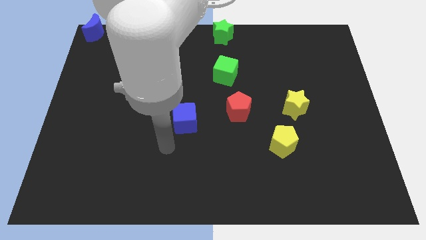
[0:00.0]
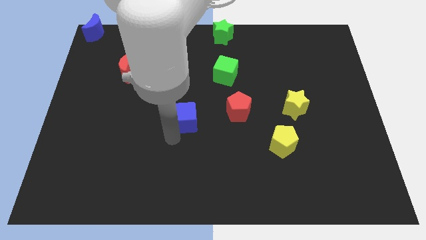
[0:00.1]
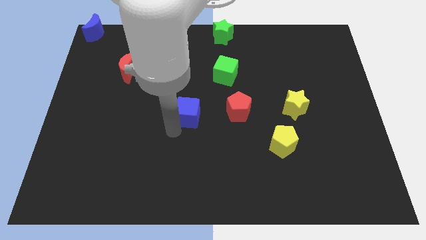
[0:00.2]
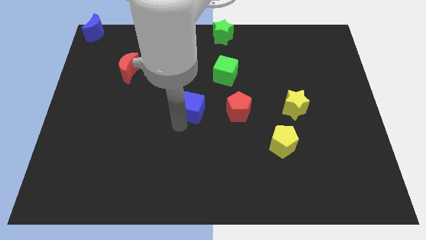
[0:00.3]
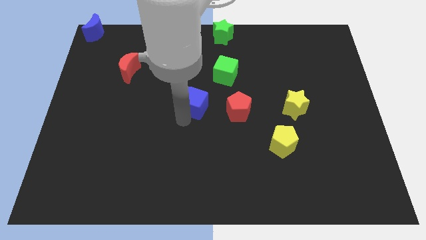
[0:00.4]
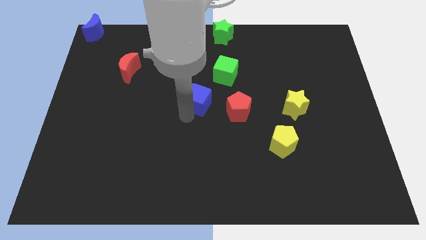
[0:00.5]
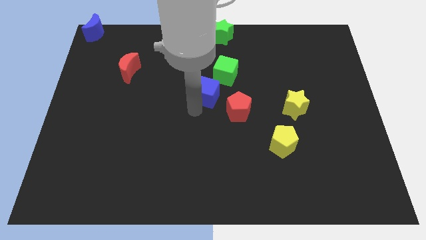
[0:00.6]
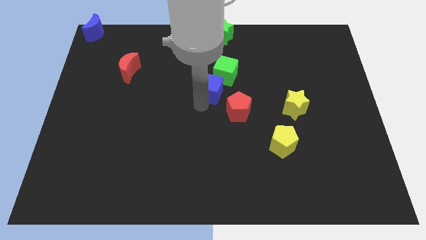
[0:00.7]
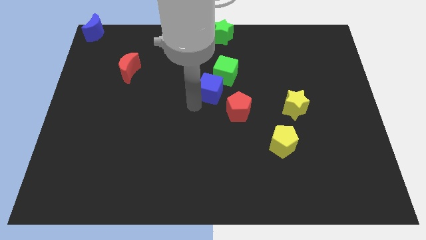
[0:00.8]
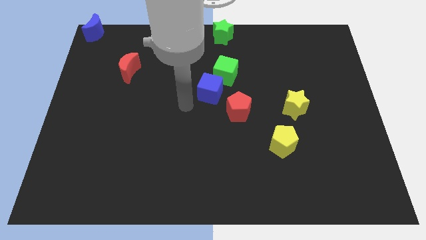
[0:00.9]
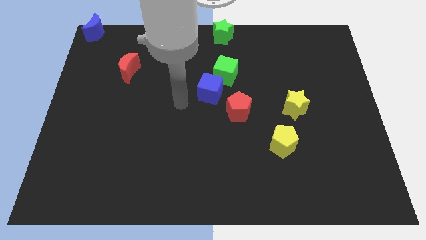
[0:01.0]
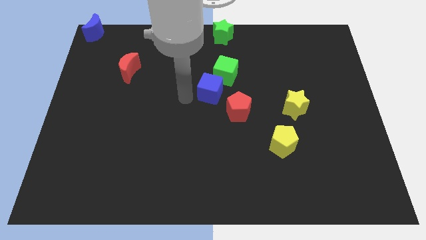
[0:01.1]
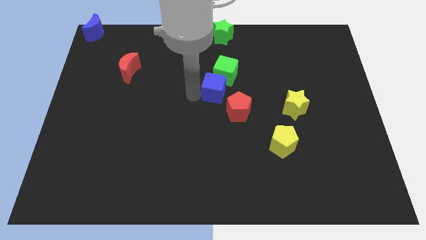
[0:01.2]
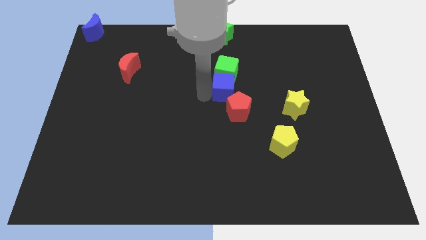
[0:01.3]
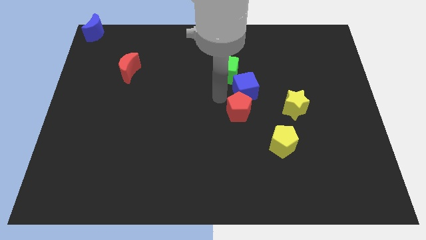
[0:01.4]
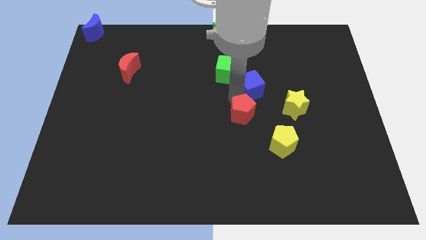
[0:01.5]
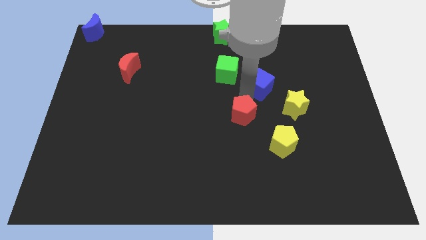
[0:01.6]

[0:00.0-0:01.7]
place the blue cube above the red pentagon

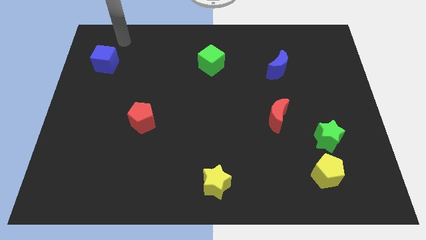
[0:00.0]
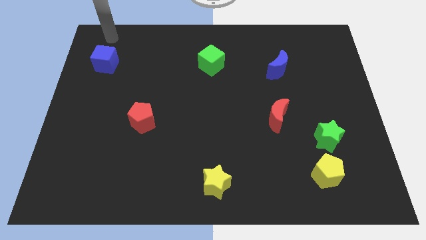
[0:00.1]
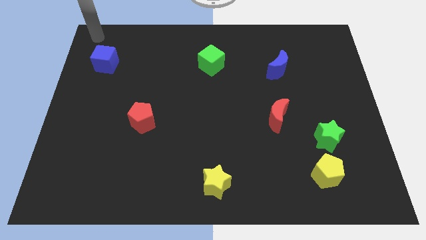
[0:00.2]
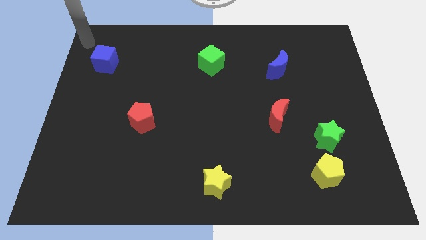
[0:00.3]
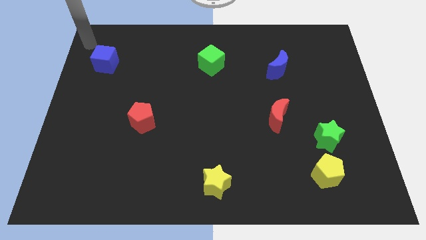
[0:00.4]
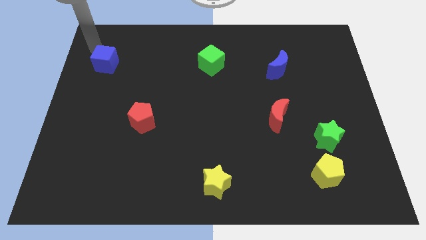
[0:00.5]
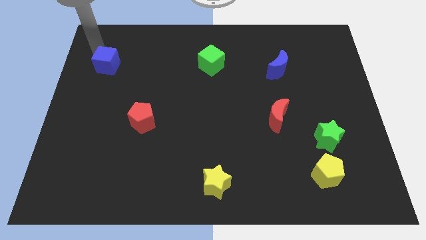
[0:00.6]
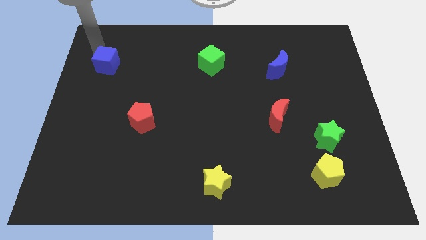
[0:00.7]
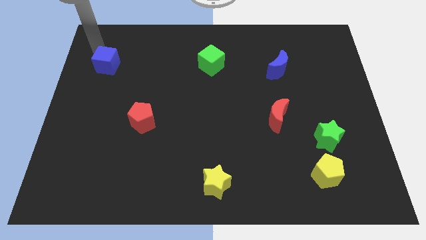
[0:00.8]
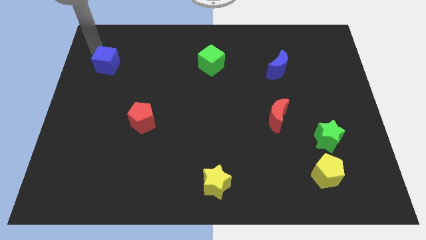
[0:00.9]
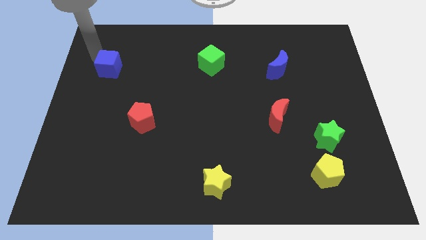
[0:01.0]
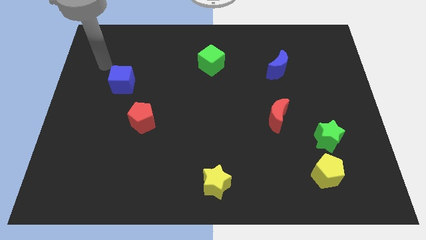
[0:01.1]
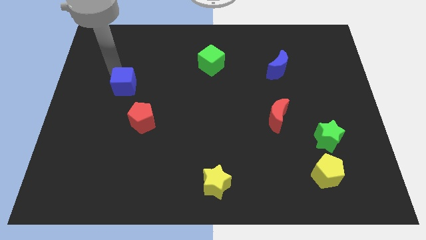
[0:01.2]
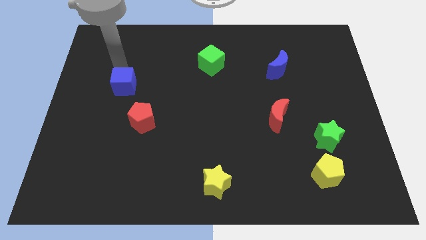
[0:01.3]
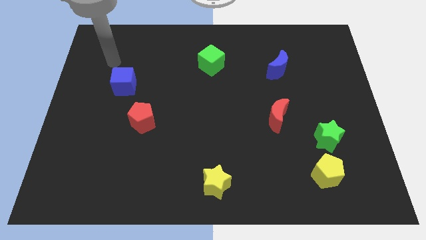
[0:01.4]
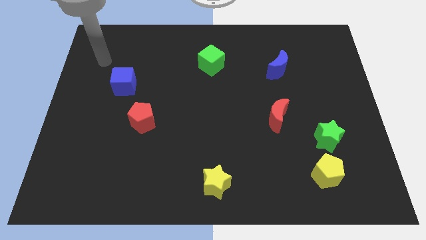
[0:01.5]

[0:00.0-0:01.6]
push the blue cube slightly towards the red pentagon

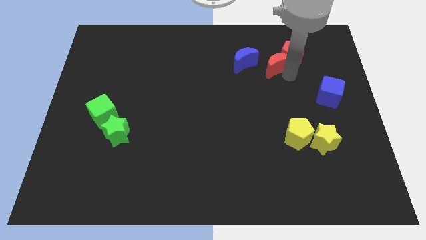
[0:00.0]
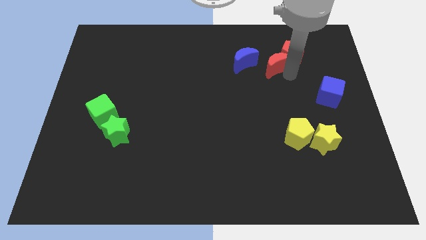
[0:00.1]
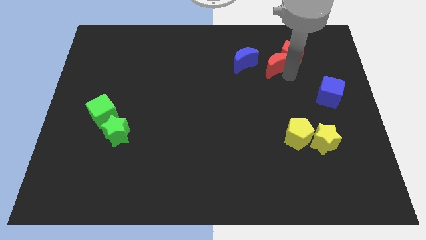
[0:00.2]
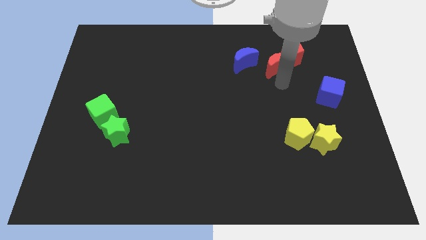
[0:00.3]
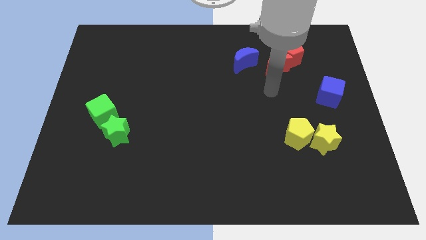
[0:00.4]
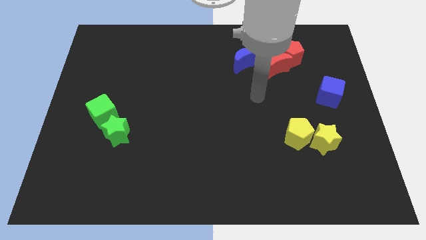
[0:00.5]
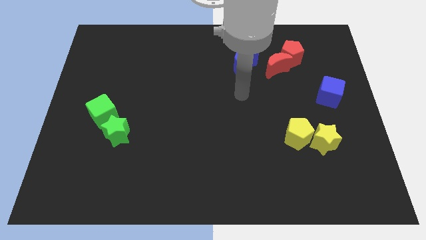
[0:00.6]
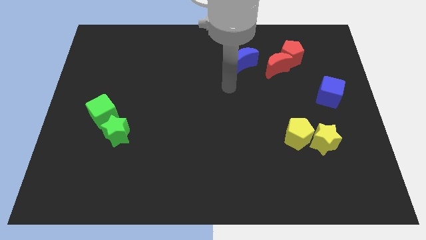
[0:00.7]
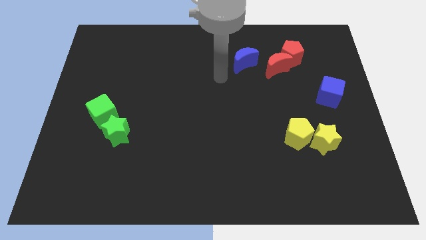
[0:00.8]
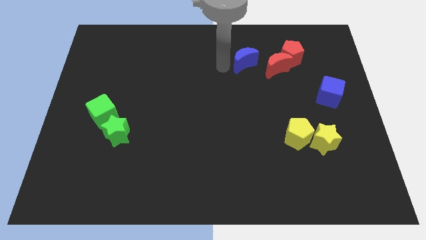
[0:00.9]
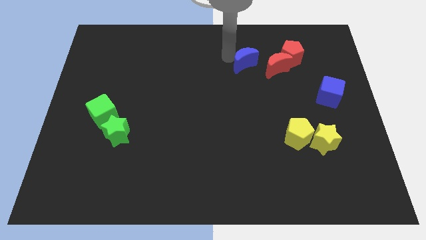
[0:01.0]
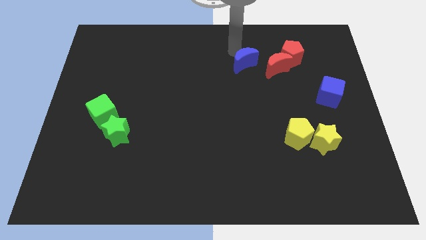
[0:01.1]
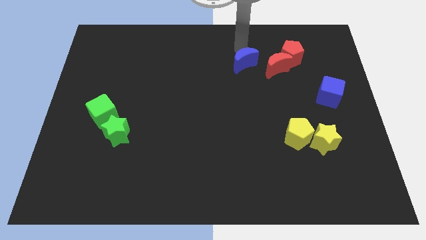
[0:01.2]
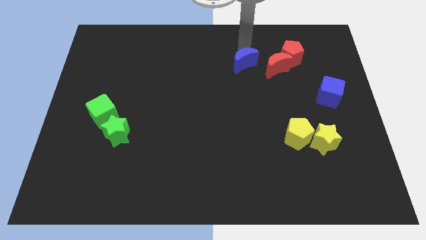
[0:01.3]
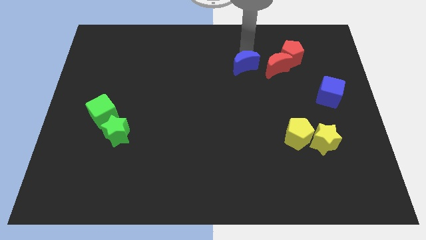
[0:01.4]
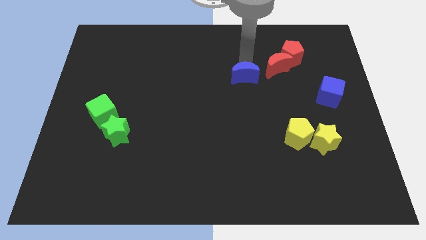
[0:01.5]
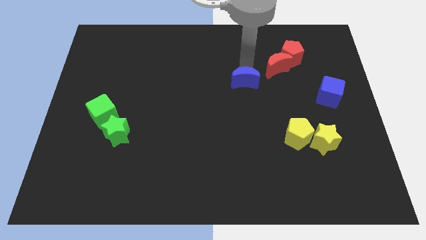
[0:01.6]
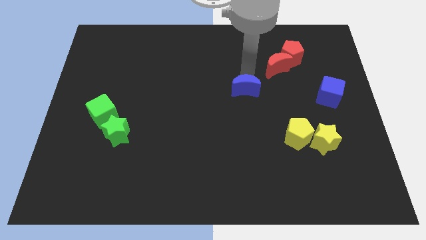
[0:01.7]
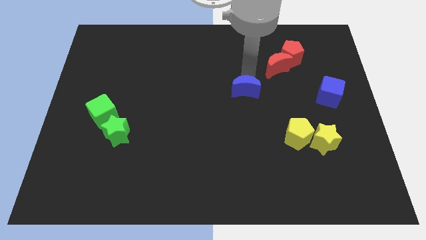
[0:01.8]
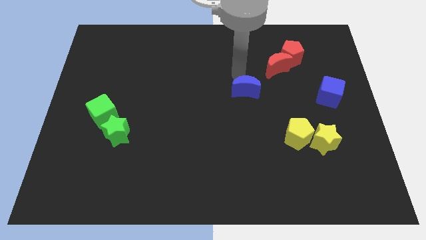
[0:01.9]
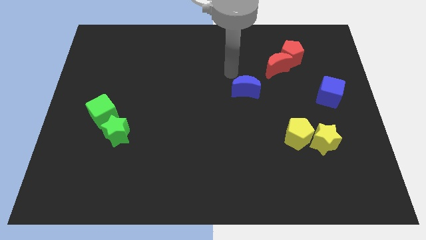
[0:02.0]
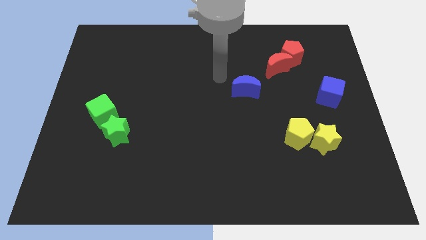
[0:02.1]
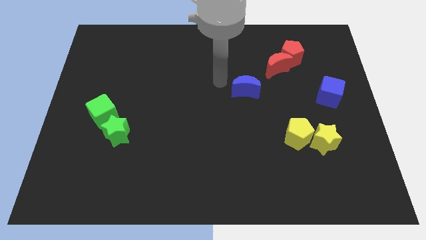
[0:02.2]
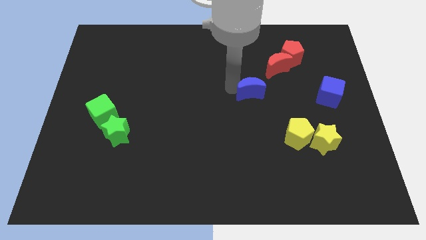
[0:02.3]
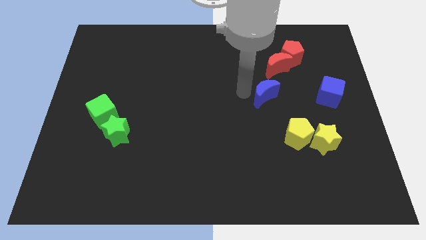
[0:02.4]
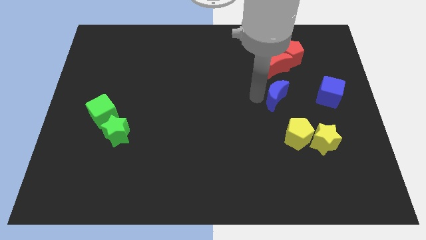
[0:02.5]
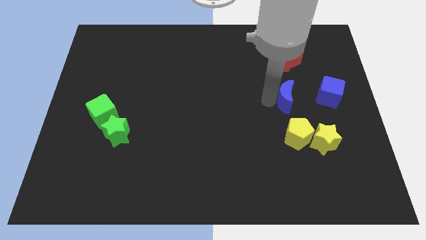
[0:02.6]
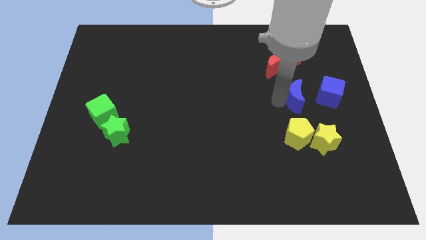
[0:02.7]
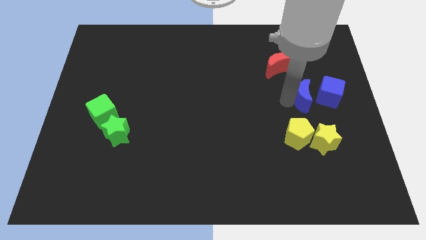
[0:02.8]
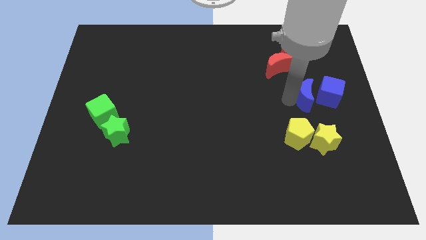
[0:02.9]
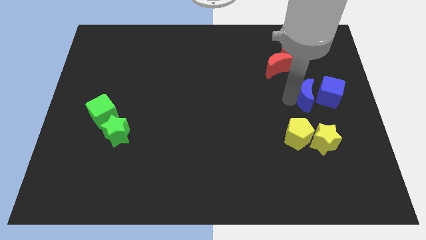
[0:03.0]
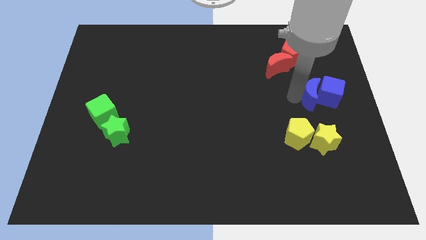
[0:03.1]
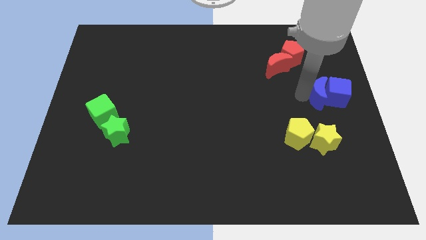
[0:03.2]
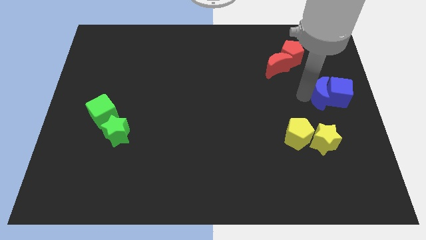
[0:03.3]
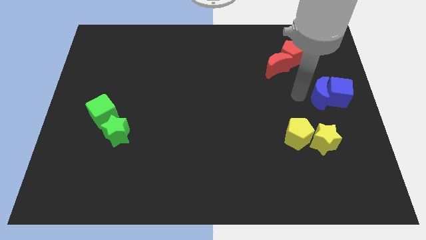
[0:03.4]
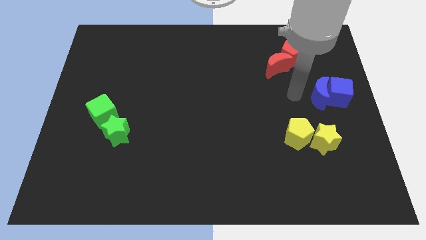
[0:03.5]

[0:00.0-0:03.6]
move blue crescent into blue block

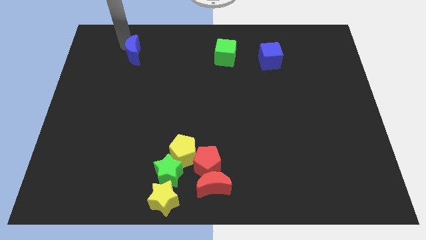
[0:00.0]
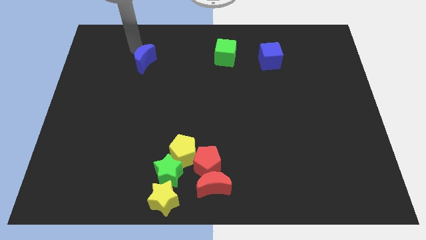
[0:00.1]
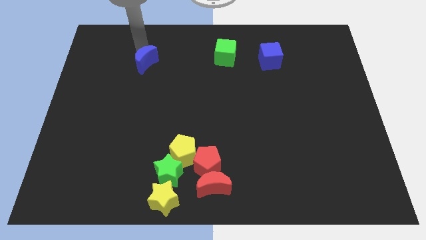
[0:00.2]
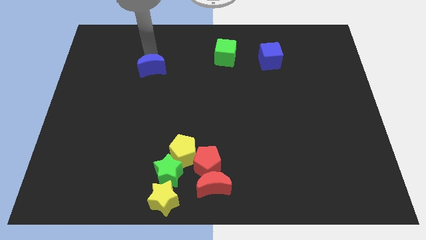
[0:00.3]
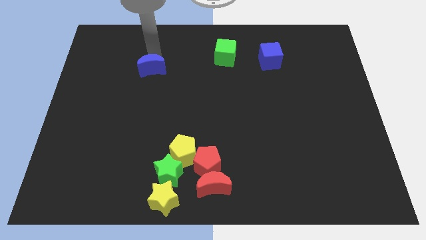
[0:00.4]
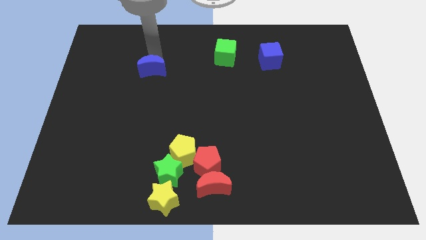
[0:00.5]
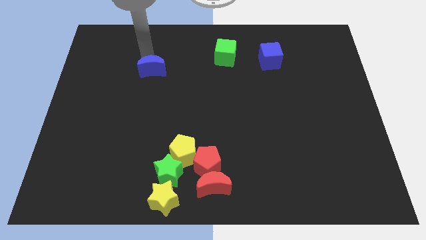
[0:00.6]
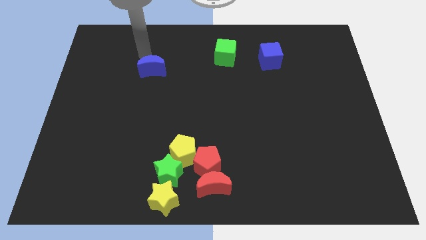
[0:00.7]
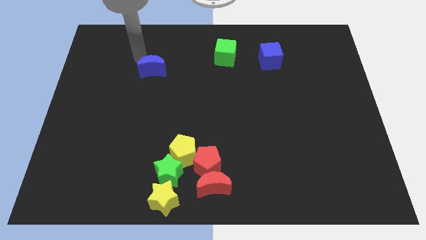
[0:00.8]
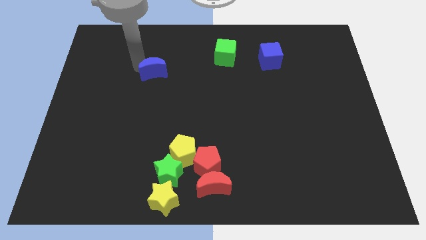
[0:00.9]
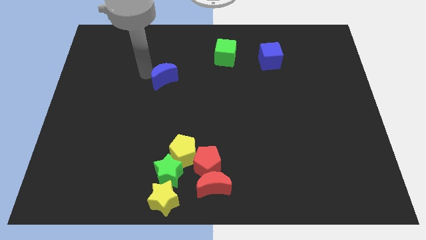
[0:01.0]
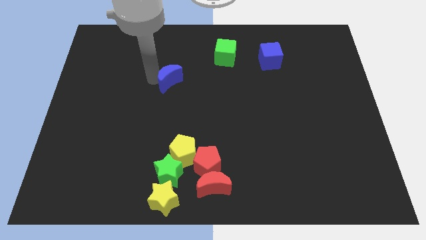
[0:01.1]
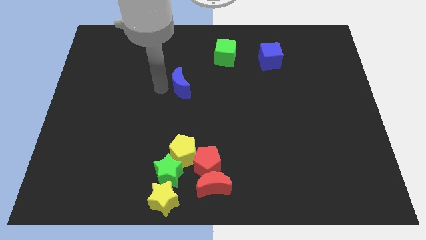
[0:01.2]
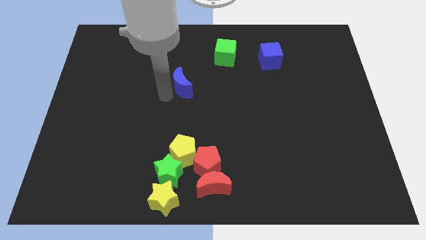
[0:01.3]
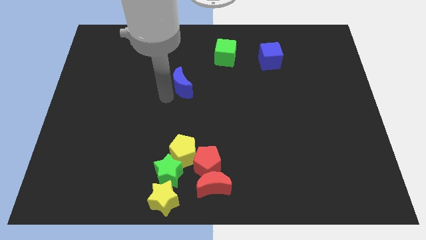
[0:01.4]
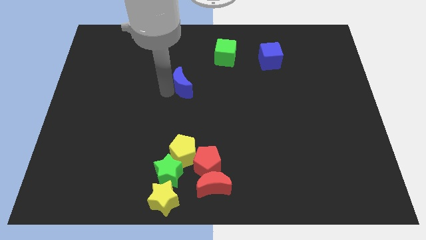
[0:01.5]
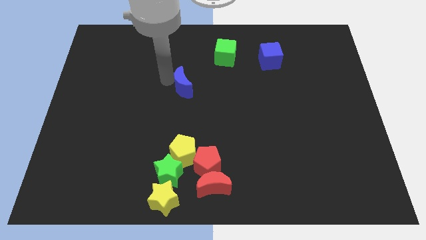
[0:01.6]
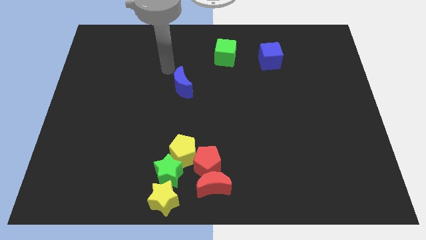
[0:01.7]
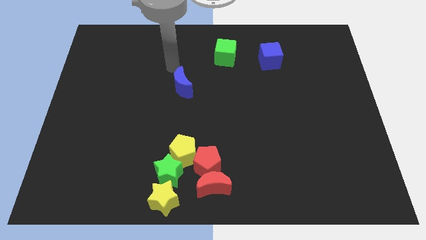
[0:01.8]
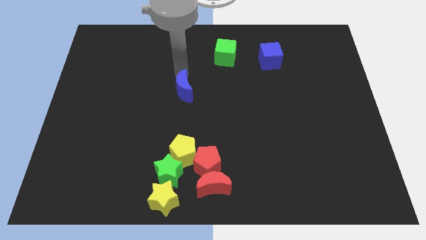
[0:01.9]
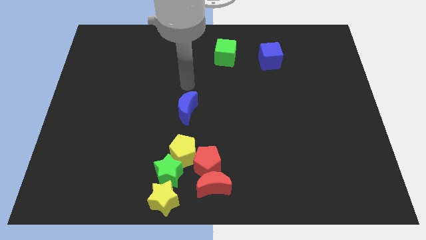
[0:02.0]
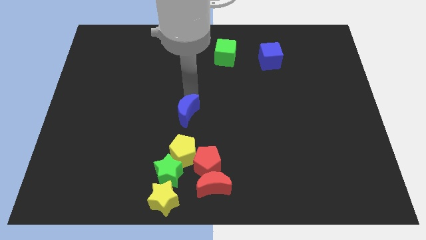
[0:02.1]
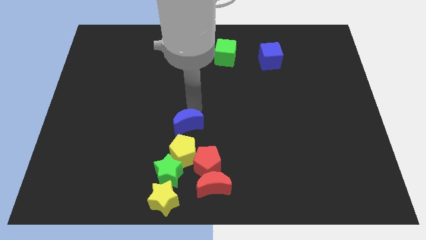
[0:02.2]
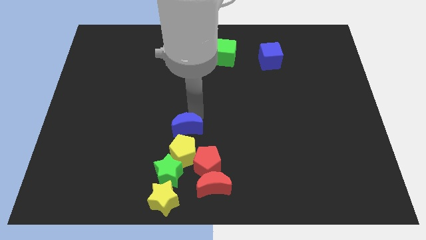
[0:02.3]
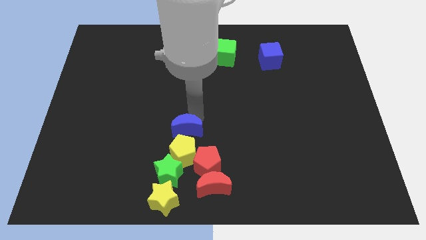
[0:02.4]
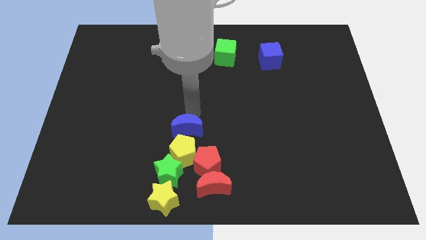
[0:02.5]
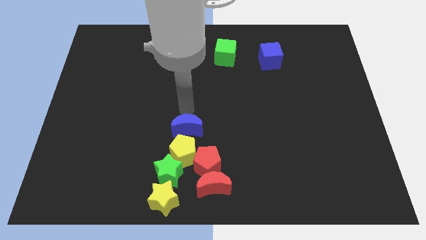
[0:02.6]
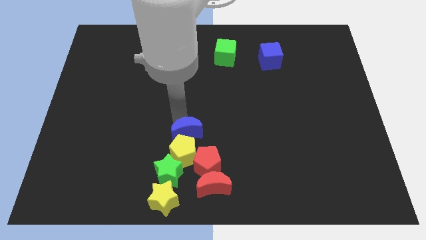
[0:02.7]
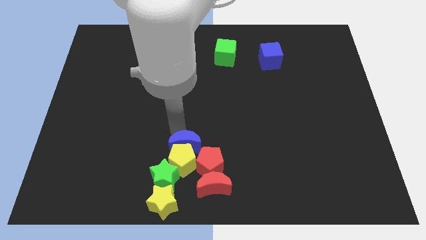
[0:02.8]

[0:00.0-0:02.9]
place the blue crescent above the yellow pentagon
